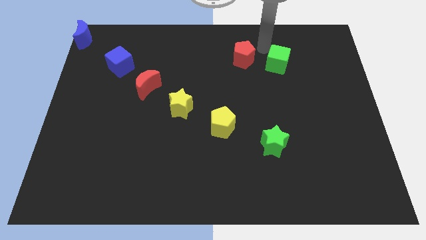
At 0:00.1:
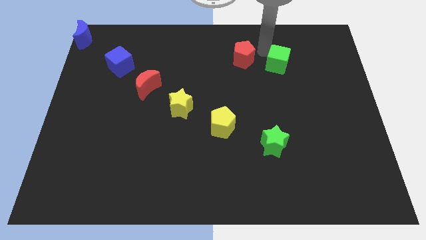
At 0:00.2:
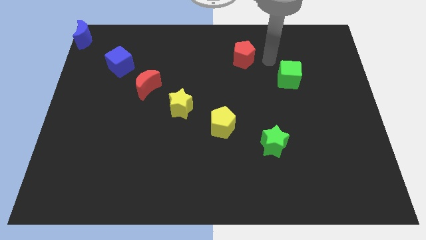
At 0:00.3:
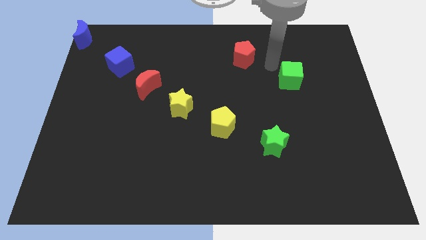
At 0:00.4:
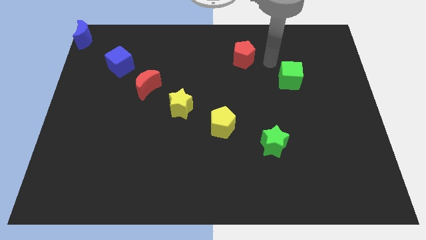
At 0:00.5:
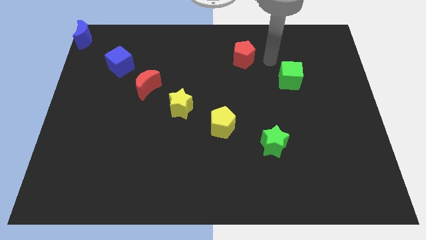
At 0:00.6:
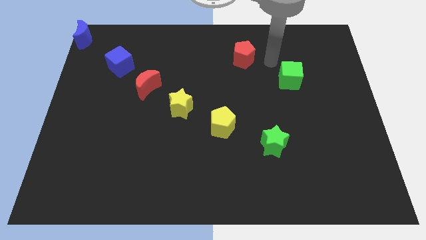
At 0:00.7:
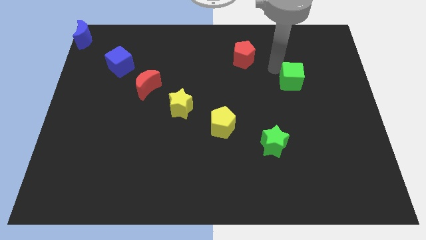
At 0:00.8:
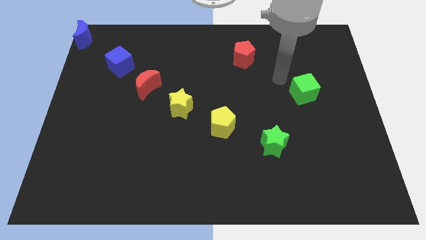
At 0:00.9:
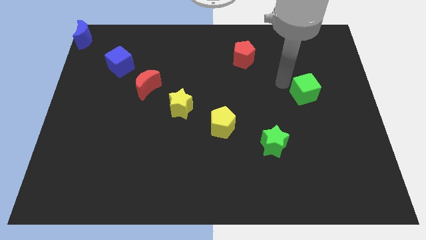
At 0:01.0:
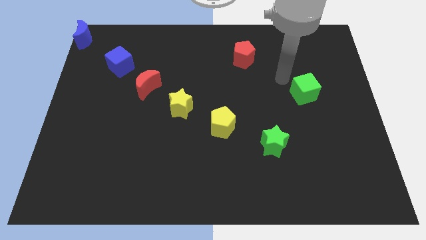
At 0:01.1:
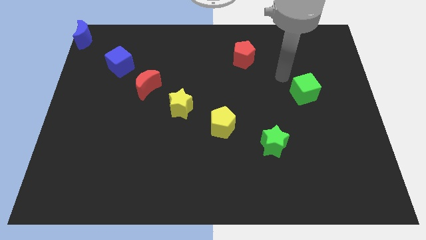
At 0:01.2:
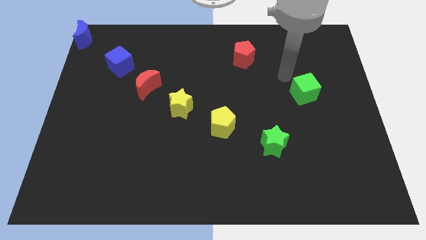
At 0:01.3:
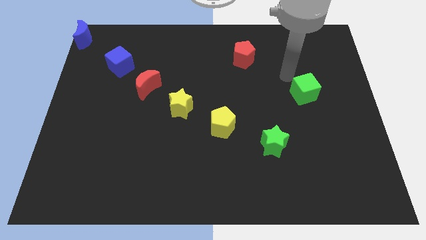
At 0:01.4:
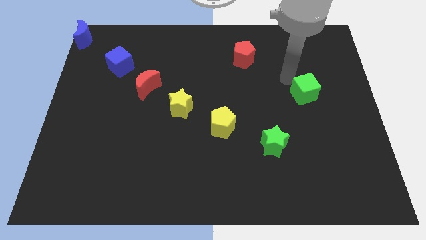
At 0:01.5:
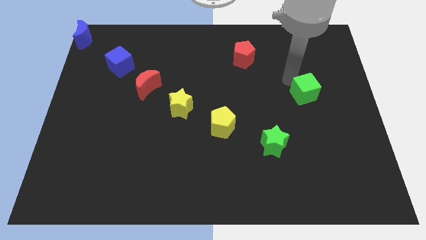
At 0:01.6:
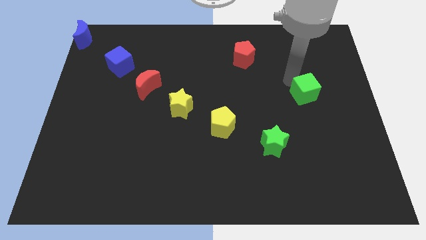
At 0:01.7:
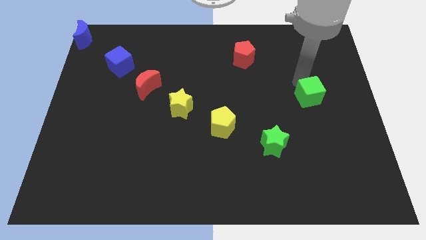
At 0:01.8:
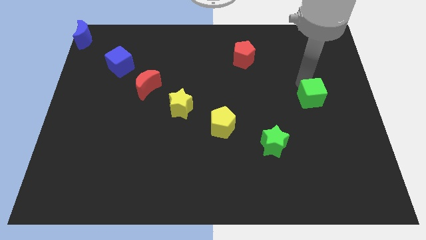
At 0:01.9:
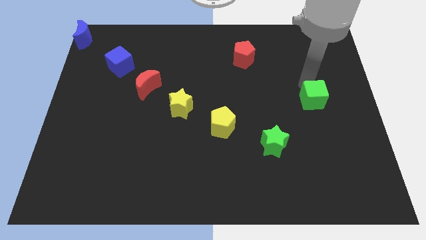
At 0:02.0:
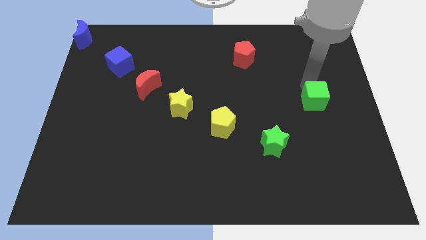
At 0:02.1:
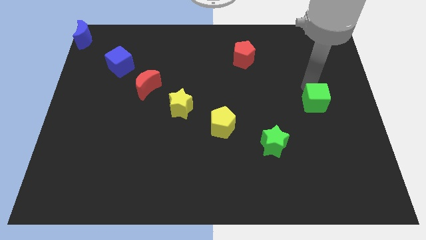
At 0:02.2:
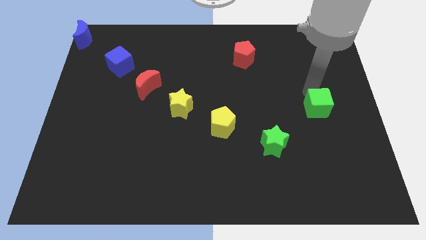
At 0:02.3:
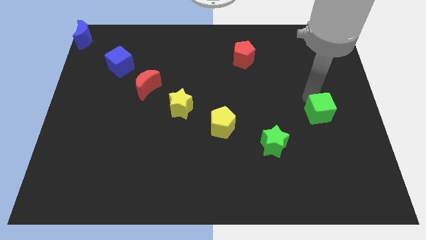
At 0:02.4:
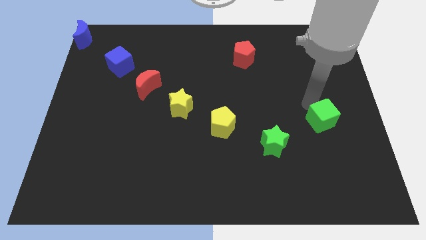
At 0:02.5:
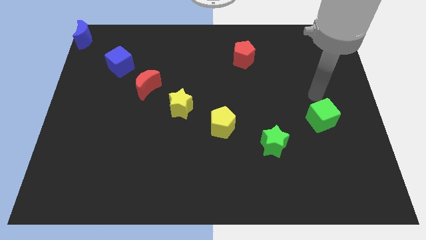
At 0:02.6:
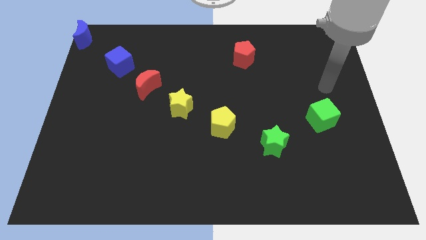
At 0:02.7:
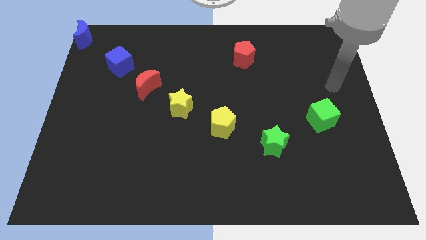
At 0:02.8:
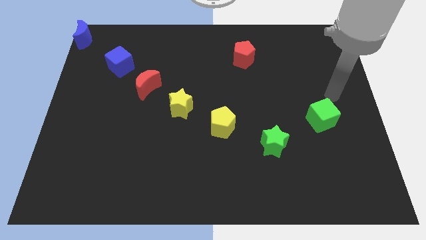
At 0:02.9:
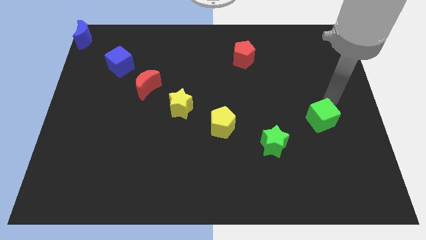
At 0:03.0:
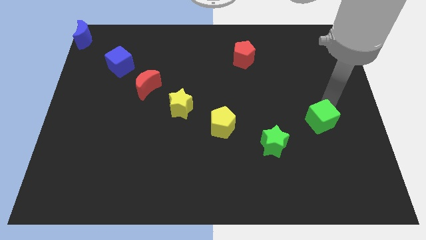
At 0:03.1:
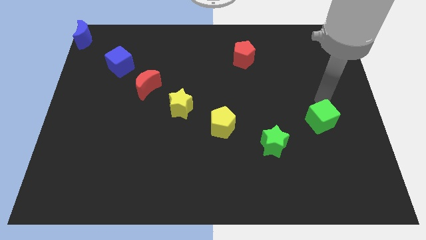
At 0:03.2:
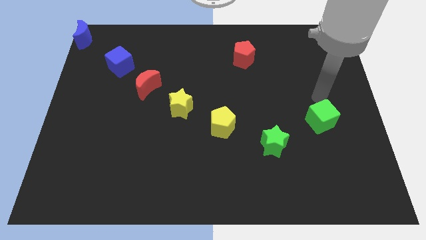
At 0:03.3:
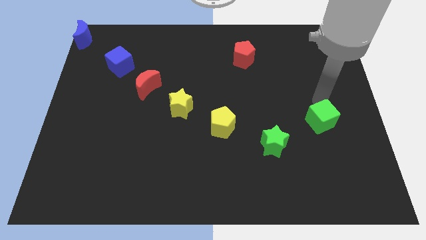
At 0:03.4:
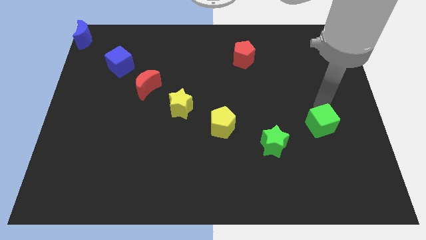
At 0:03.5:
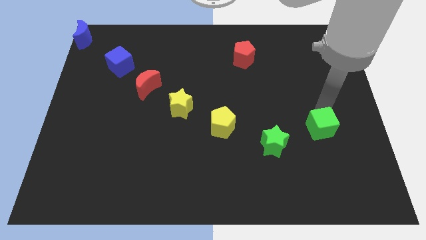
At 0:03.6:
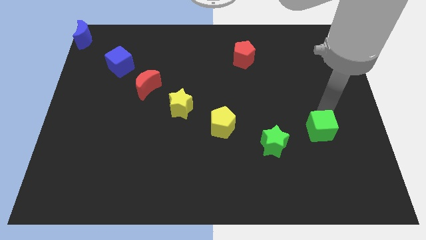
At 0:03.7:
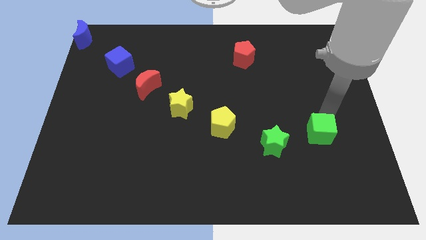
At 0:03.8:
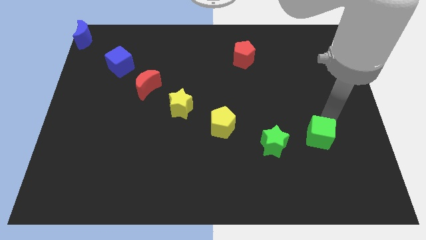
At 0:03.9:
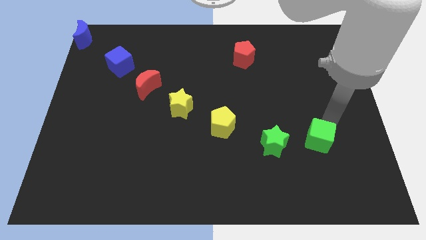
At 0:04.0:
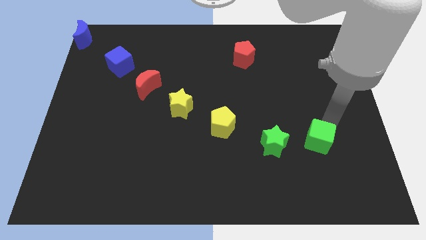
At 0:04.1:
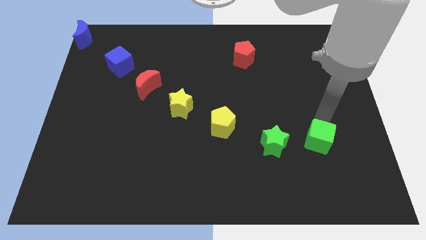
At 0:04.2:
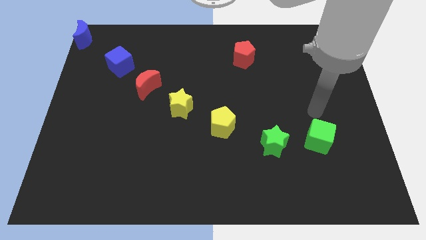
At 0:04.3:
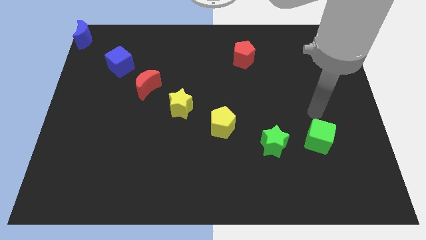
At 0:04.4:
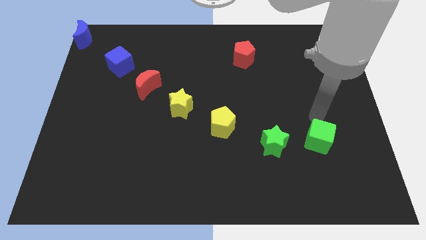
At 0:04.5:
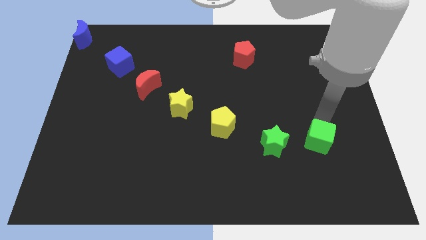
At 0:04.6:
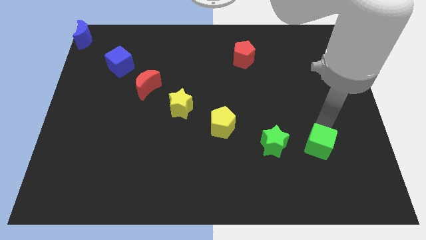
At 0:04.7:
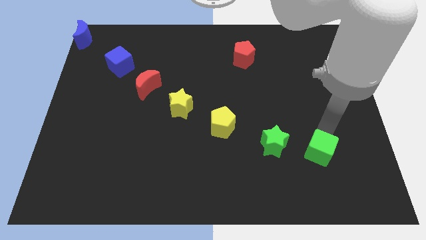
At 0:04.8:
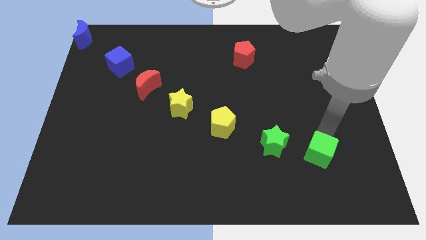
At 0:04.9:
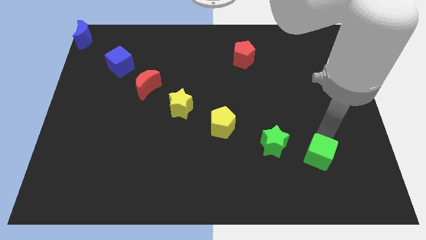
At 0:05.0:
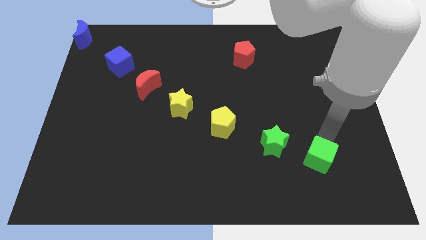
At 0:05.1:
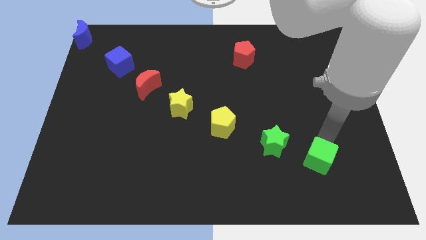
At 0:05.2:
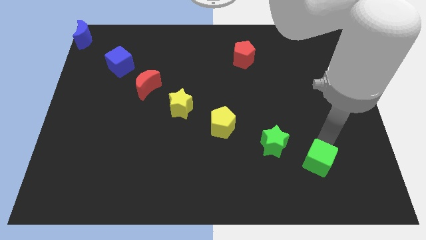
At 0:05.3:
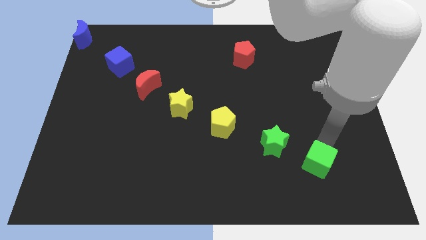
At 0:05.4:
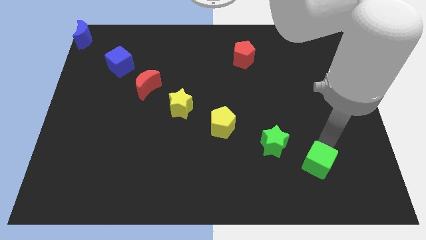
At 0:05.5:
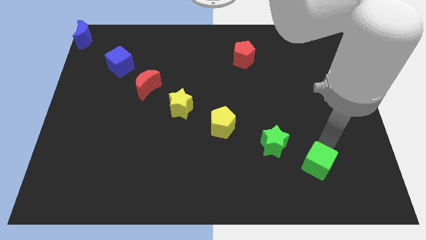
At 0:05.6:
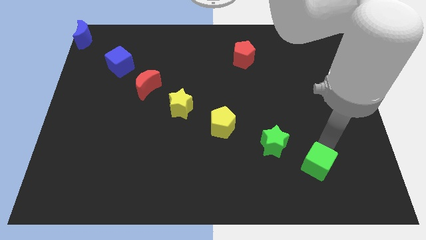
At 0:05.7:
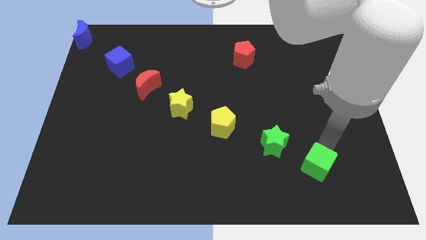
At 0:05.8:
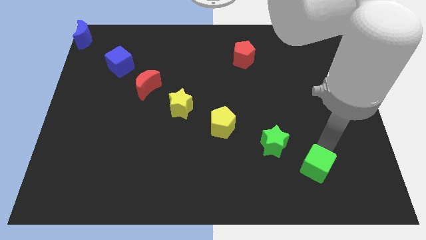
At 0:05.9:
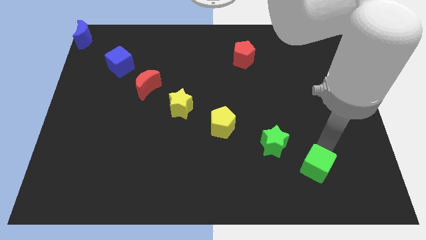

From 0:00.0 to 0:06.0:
place the green cube diagonally to the bottom right of the green star

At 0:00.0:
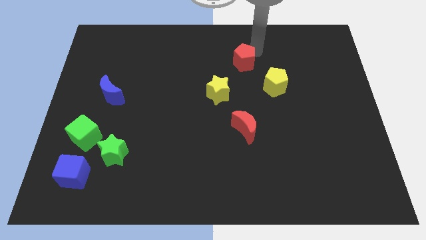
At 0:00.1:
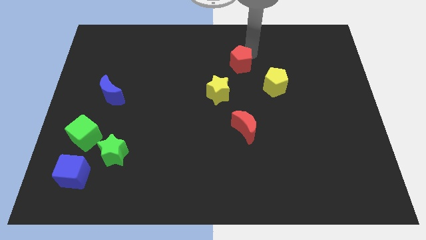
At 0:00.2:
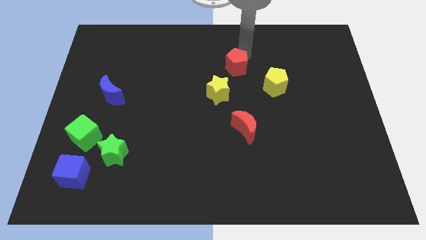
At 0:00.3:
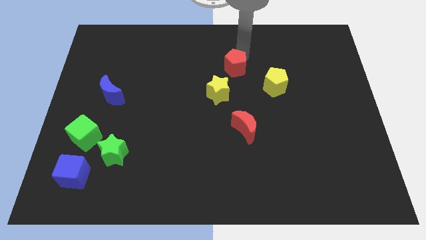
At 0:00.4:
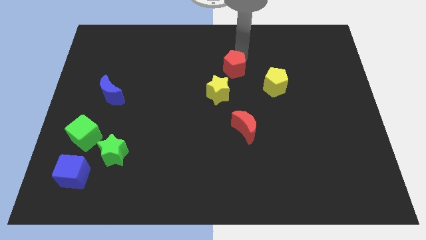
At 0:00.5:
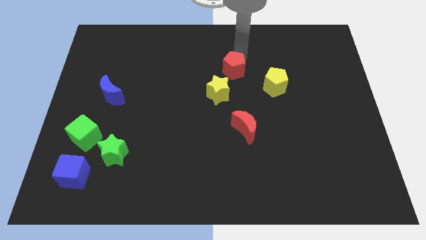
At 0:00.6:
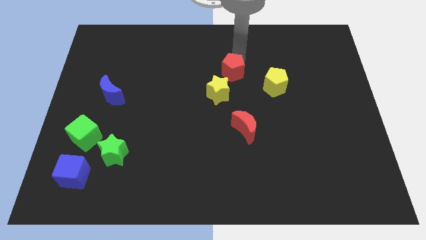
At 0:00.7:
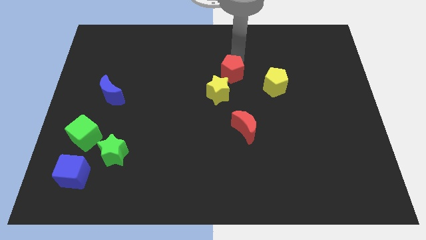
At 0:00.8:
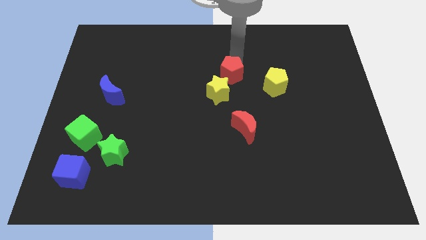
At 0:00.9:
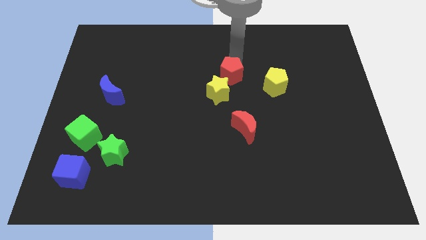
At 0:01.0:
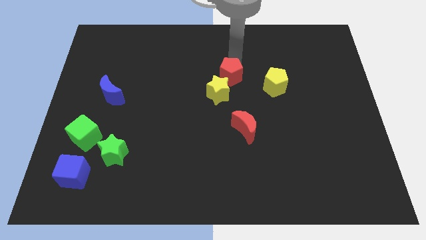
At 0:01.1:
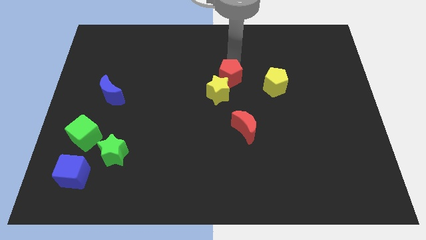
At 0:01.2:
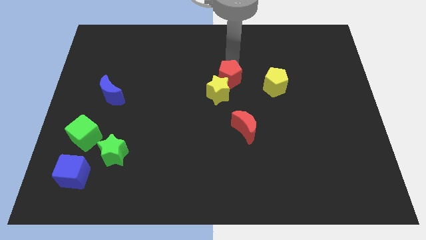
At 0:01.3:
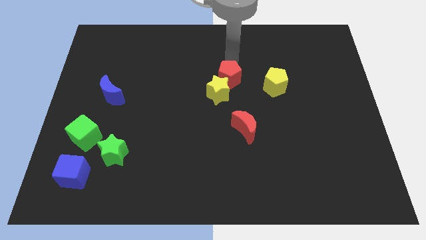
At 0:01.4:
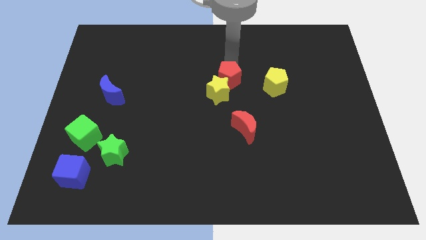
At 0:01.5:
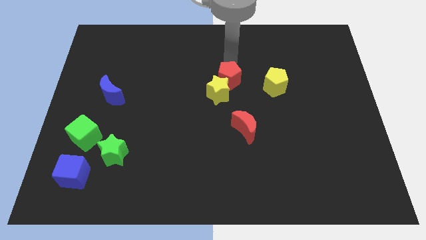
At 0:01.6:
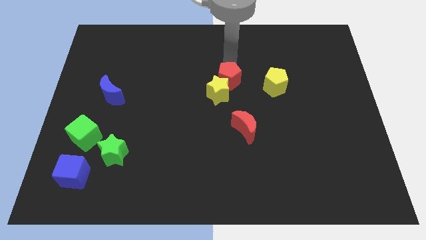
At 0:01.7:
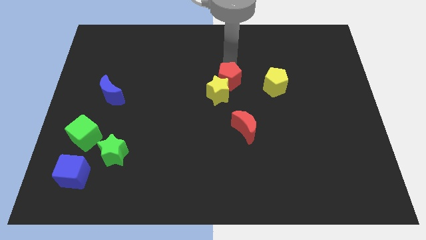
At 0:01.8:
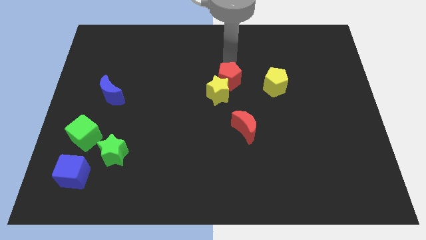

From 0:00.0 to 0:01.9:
push the red pentagon into the yellow star

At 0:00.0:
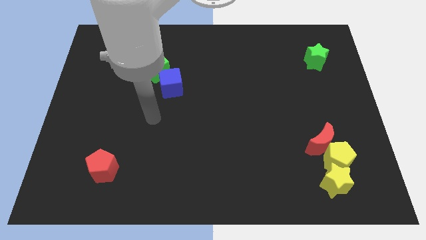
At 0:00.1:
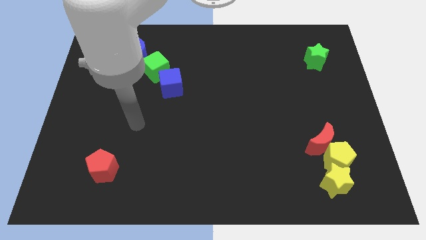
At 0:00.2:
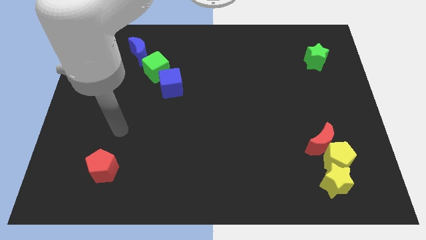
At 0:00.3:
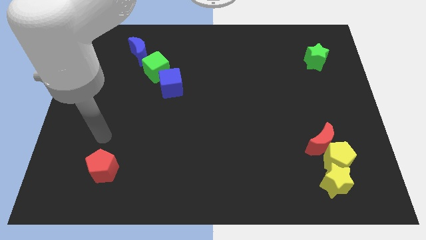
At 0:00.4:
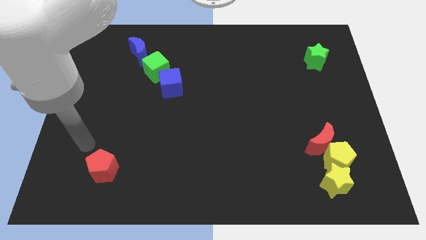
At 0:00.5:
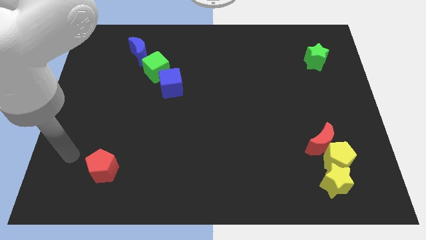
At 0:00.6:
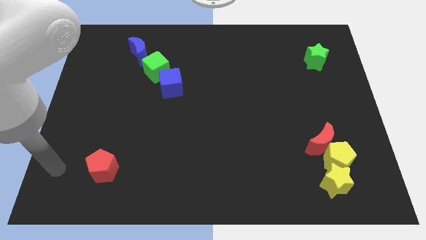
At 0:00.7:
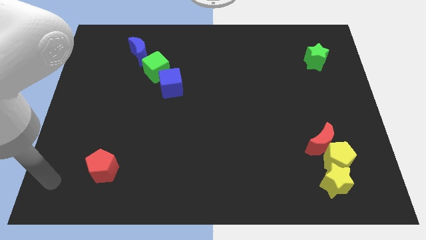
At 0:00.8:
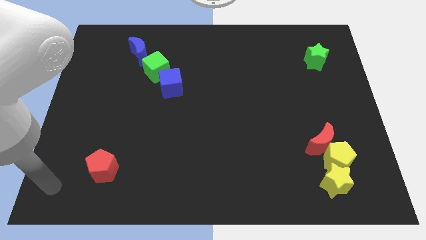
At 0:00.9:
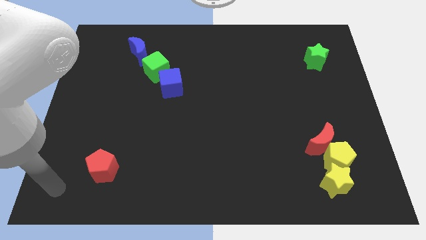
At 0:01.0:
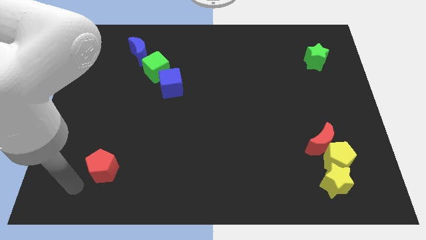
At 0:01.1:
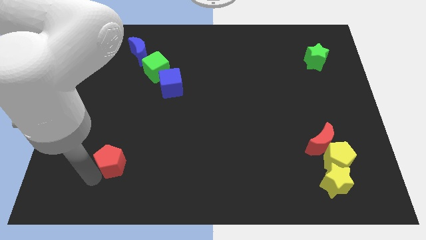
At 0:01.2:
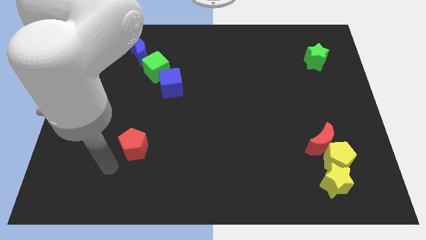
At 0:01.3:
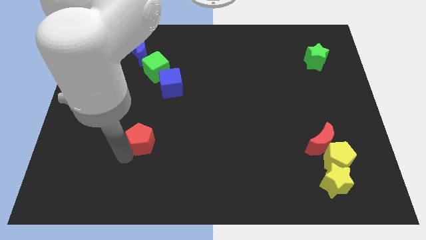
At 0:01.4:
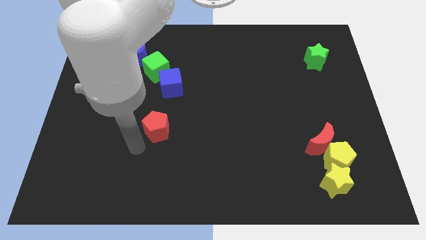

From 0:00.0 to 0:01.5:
drag the red pentagon towards the blue cube
